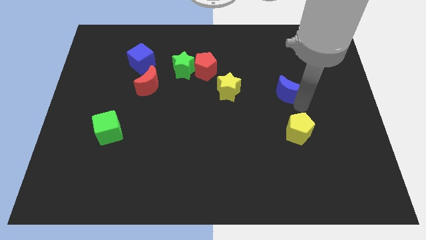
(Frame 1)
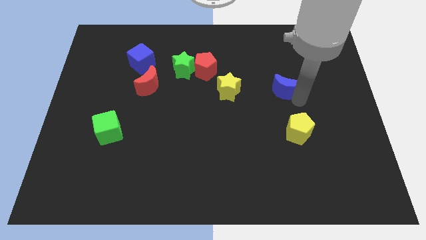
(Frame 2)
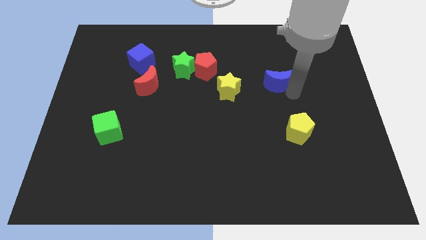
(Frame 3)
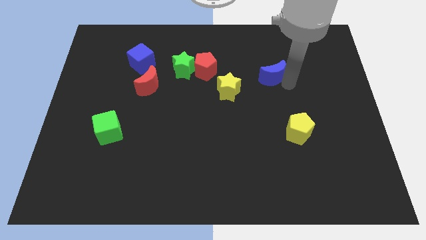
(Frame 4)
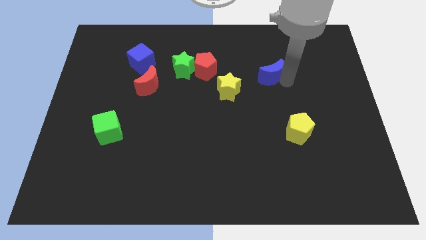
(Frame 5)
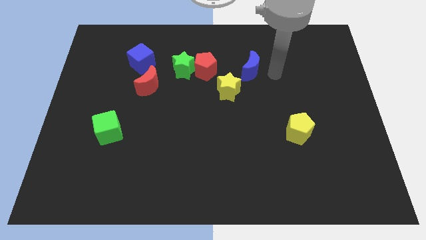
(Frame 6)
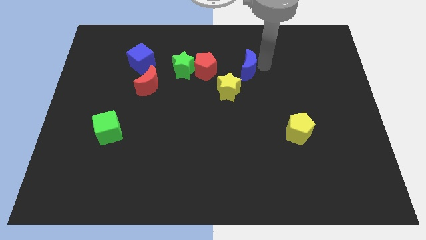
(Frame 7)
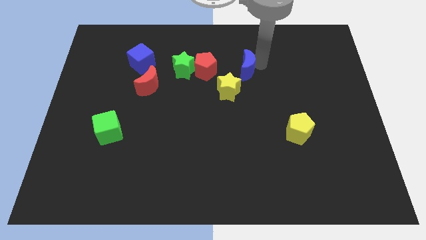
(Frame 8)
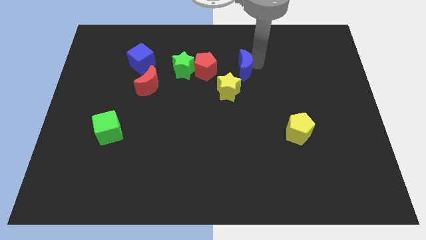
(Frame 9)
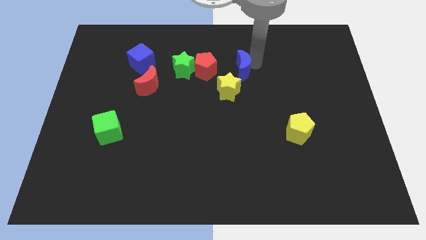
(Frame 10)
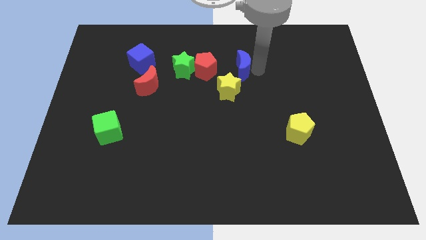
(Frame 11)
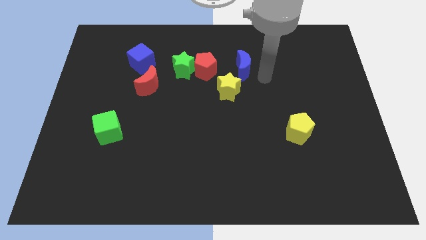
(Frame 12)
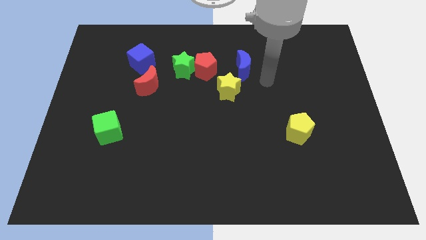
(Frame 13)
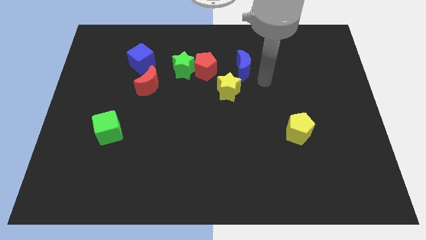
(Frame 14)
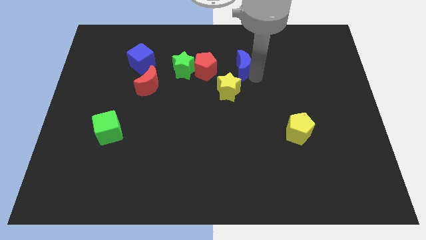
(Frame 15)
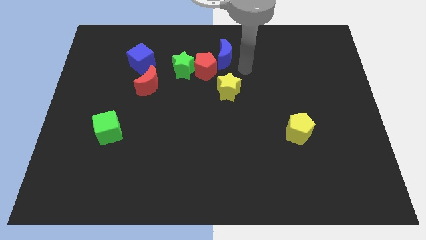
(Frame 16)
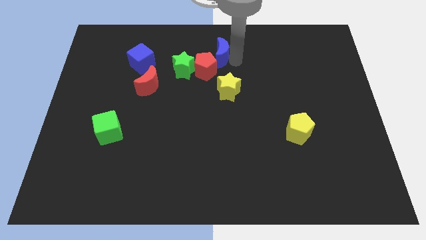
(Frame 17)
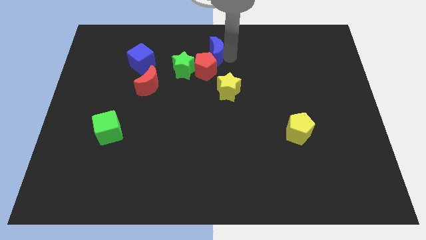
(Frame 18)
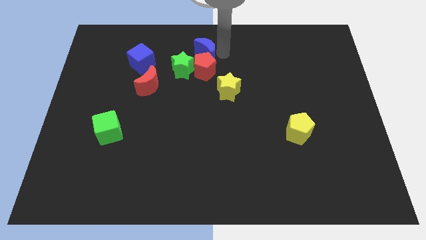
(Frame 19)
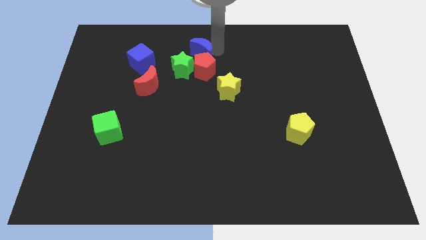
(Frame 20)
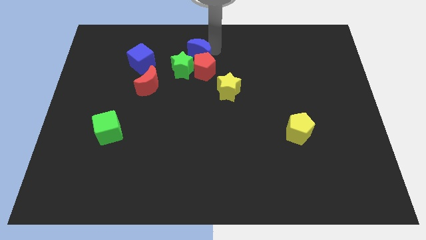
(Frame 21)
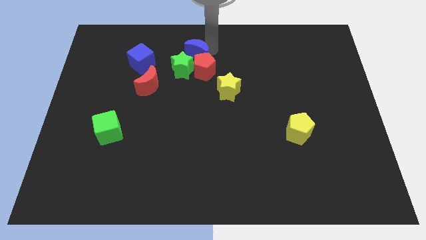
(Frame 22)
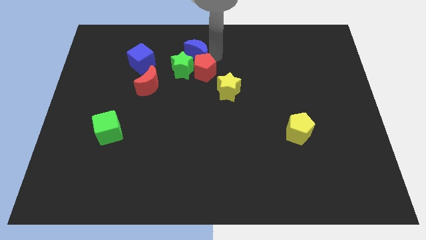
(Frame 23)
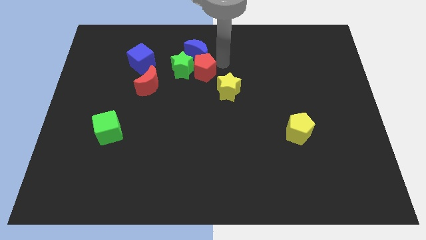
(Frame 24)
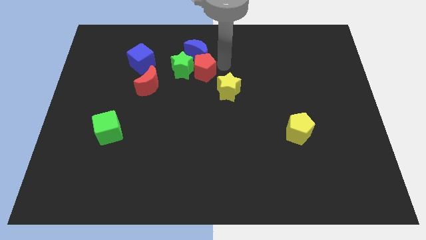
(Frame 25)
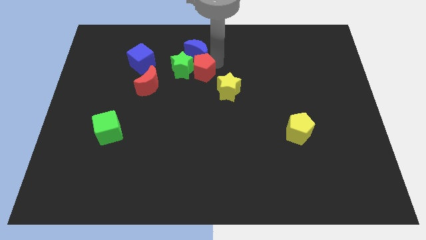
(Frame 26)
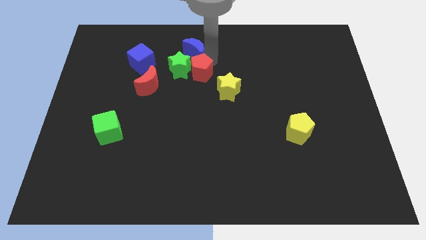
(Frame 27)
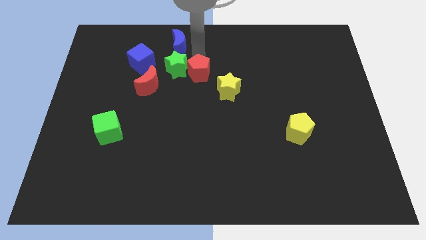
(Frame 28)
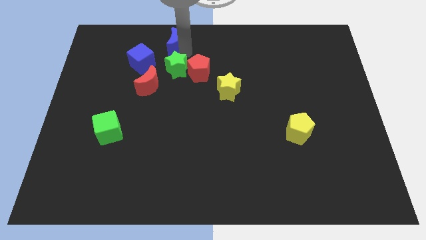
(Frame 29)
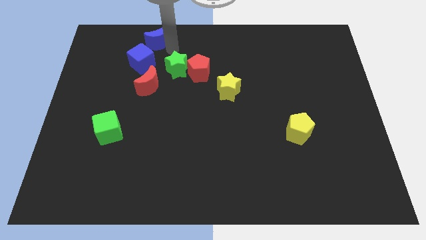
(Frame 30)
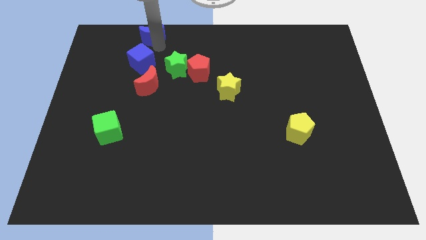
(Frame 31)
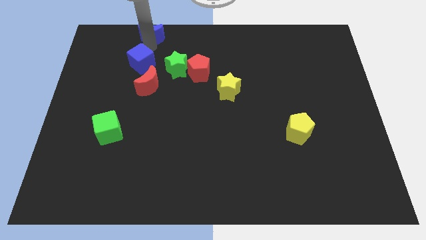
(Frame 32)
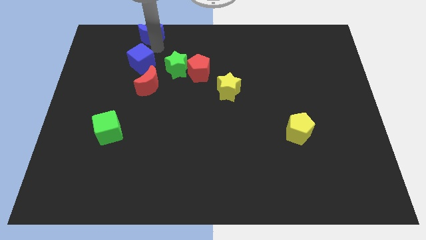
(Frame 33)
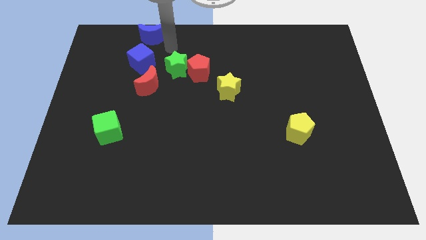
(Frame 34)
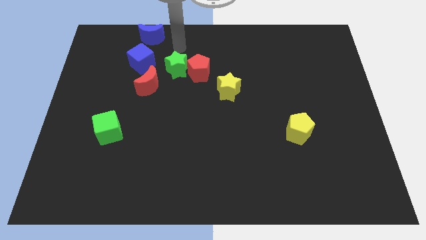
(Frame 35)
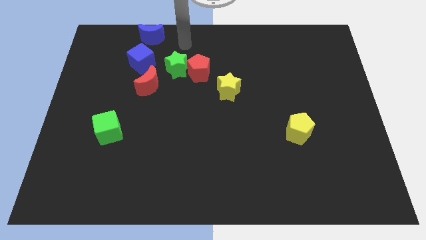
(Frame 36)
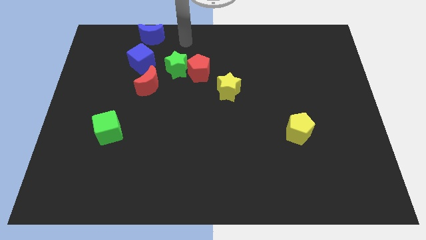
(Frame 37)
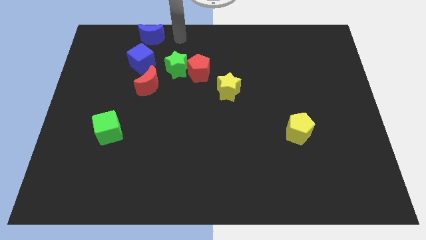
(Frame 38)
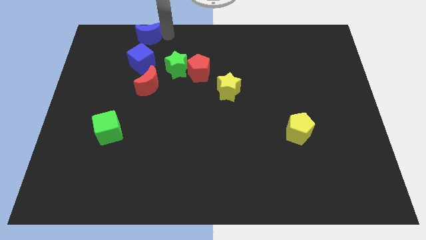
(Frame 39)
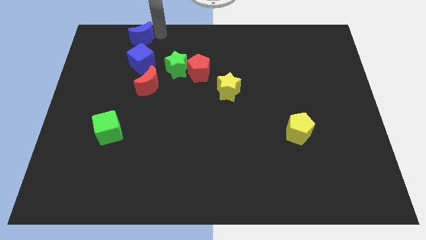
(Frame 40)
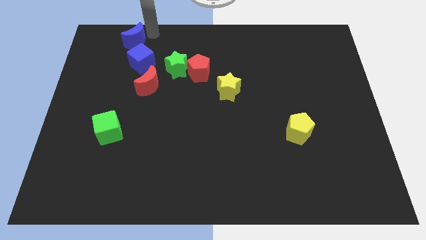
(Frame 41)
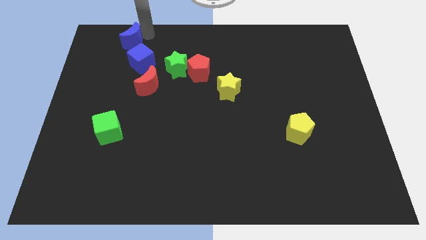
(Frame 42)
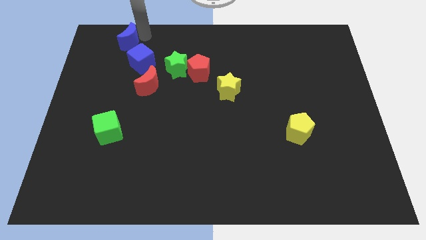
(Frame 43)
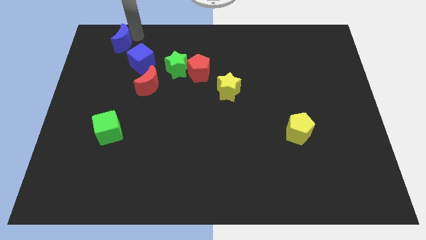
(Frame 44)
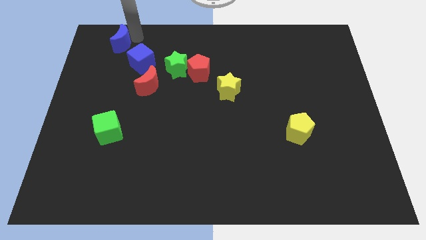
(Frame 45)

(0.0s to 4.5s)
move the blue crescent to the top left of the blue cube

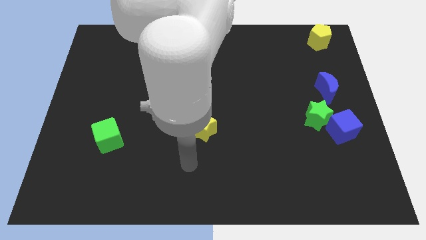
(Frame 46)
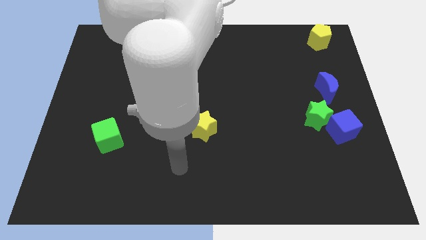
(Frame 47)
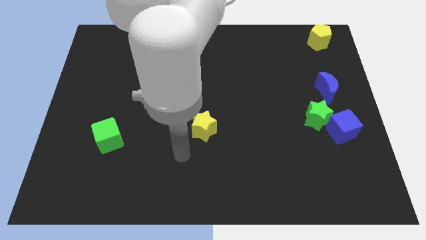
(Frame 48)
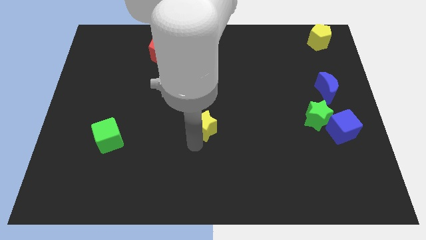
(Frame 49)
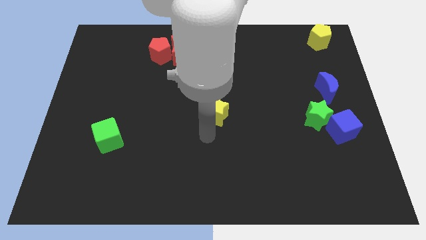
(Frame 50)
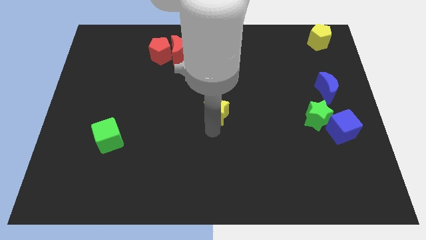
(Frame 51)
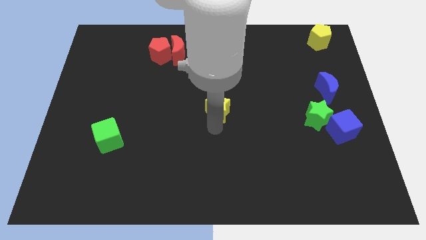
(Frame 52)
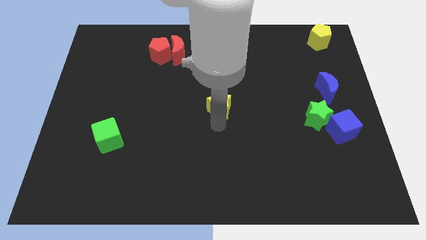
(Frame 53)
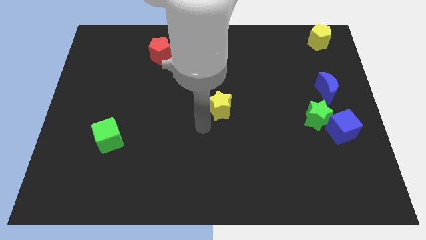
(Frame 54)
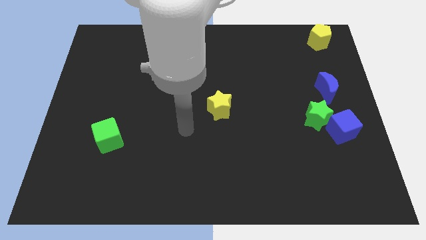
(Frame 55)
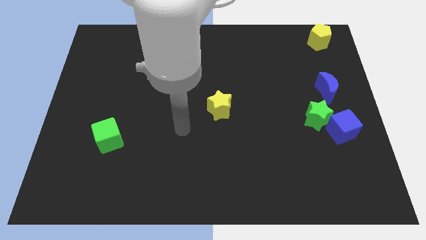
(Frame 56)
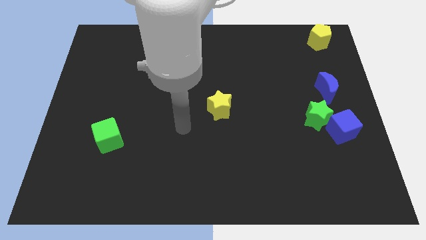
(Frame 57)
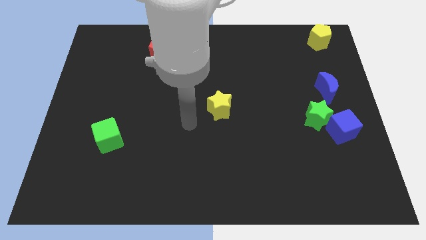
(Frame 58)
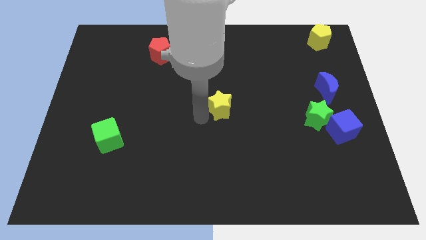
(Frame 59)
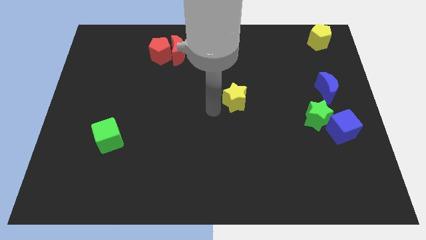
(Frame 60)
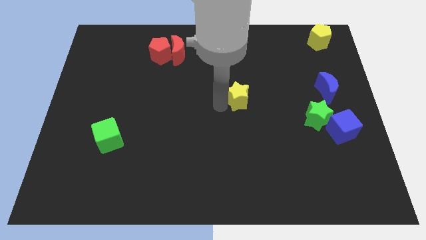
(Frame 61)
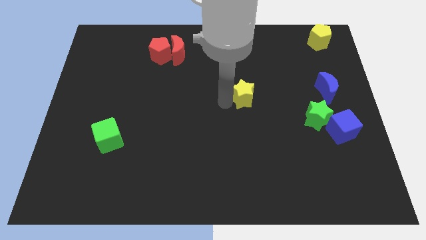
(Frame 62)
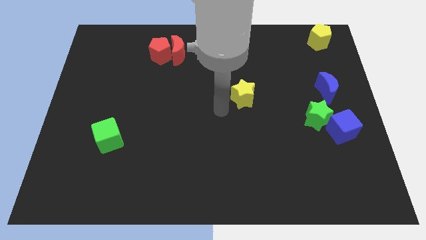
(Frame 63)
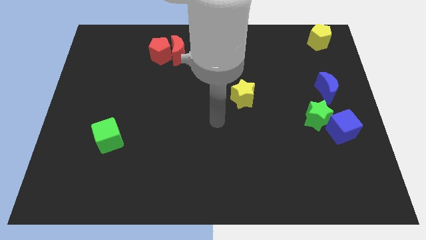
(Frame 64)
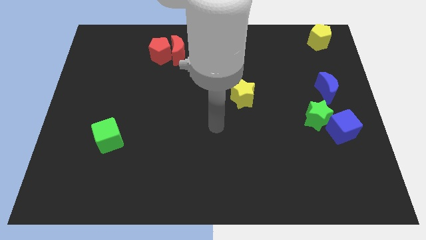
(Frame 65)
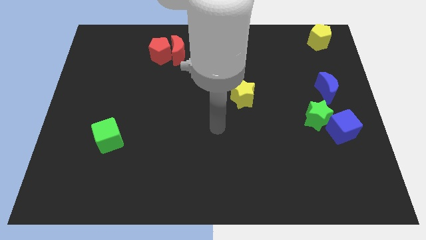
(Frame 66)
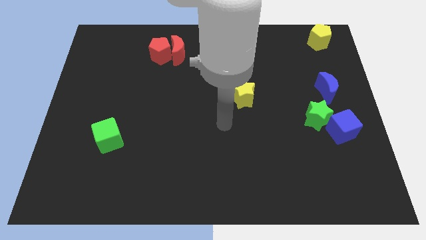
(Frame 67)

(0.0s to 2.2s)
push the yellow star to the center of the board

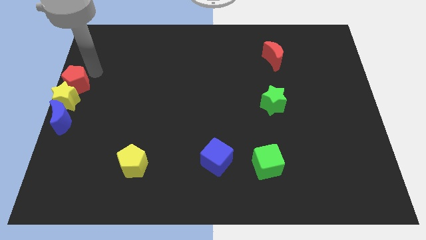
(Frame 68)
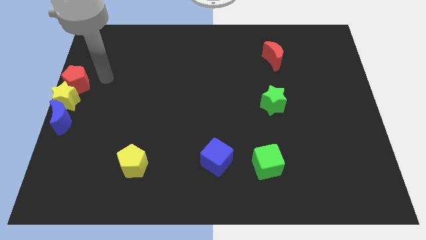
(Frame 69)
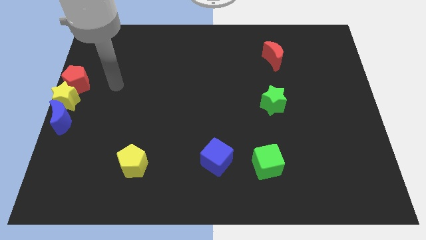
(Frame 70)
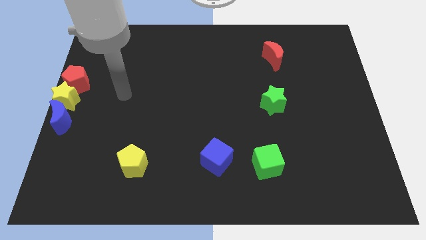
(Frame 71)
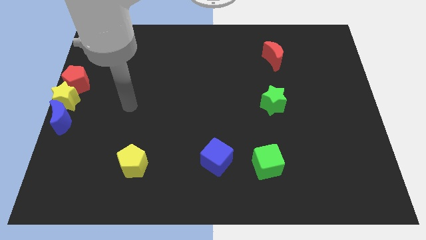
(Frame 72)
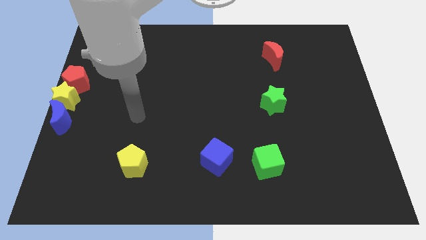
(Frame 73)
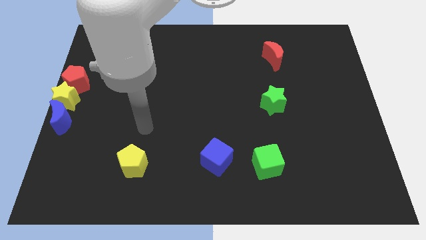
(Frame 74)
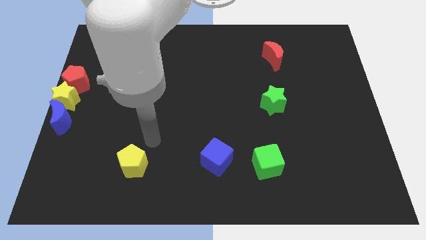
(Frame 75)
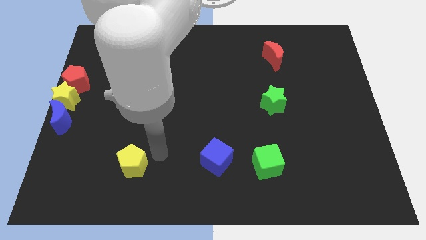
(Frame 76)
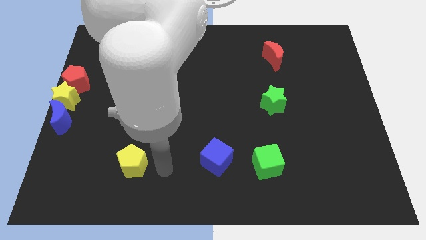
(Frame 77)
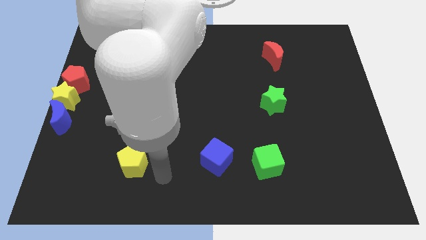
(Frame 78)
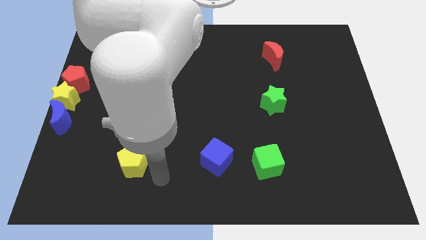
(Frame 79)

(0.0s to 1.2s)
move the arm away from the red pentagon

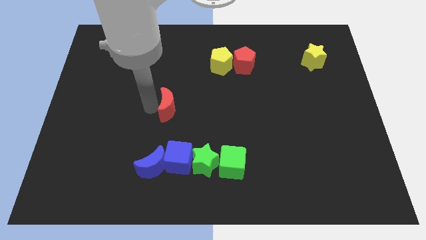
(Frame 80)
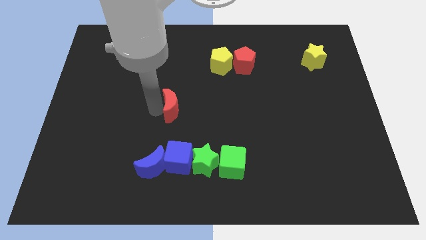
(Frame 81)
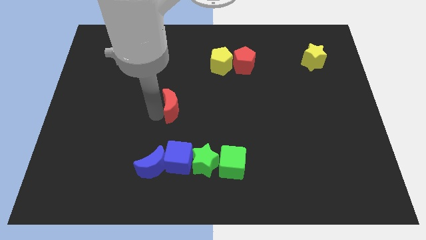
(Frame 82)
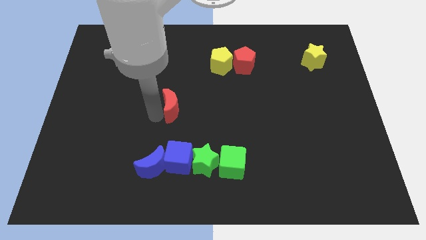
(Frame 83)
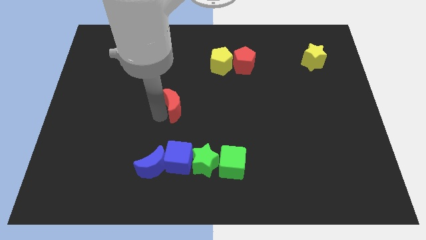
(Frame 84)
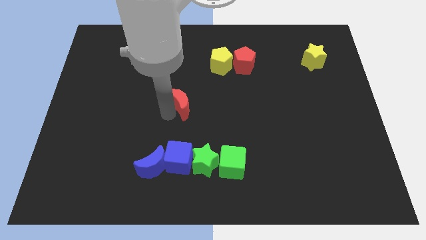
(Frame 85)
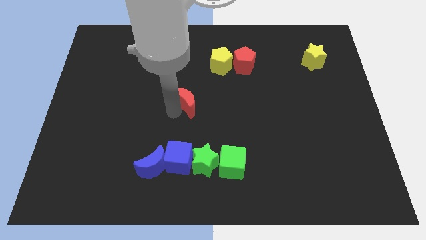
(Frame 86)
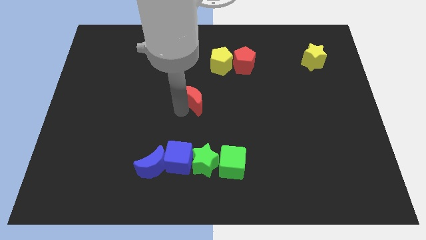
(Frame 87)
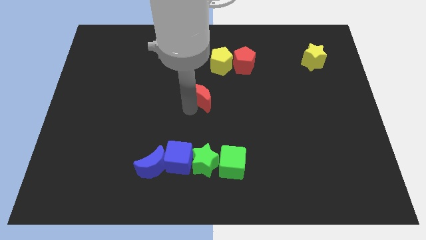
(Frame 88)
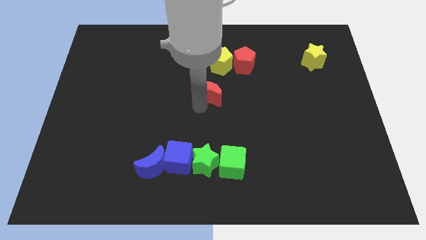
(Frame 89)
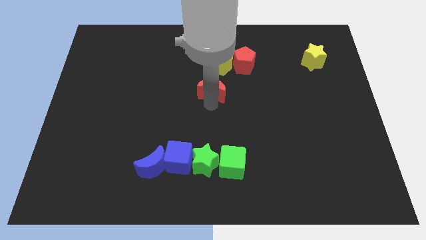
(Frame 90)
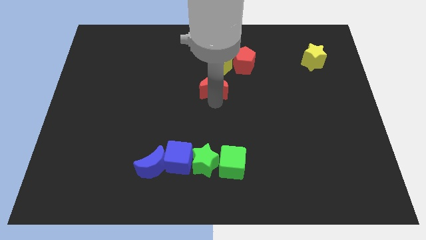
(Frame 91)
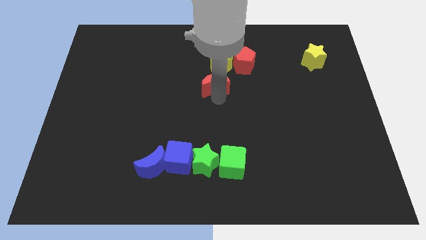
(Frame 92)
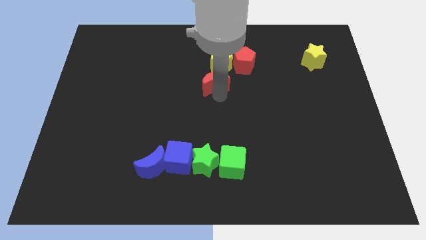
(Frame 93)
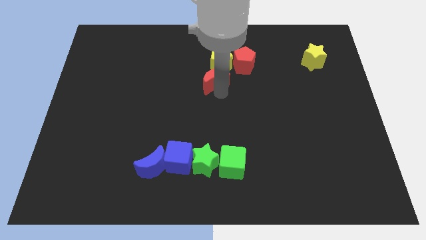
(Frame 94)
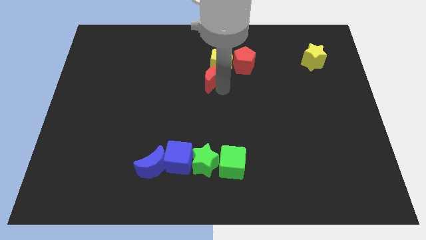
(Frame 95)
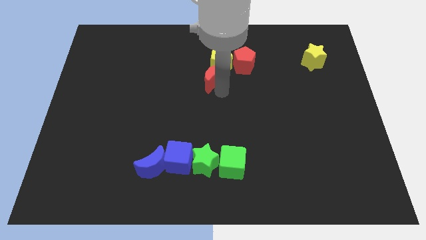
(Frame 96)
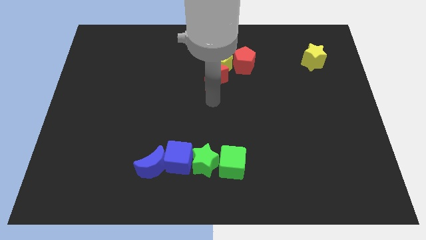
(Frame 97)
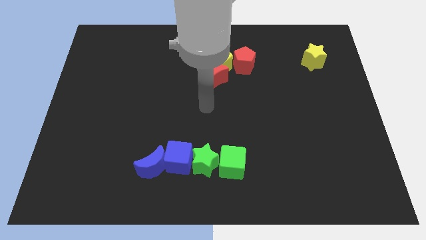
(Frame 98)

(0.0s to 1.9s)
place the red crescent below to the yellow pentagon
